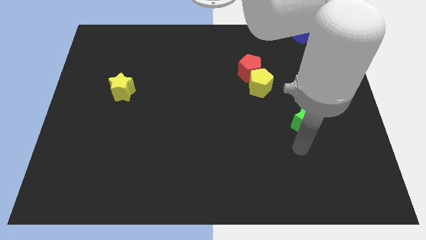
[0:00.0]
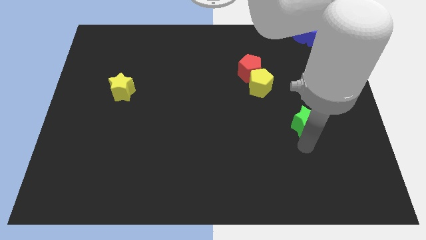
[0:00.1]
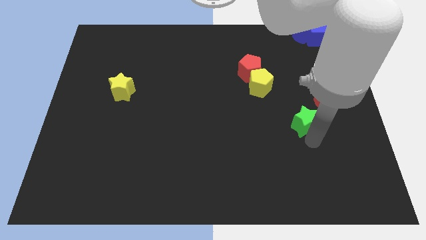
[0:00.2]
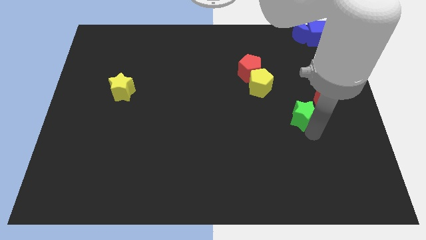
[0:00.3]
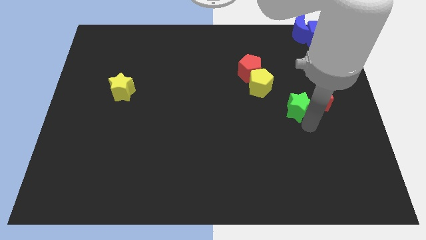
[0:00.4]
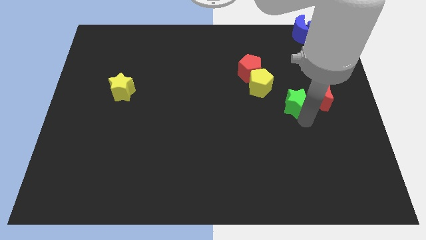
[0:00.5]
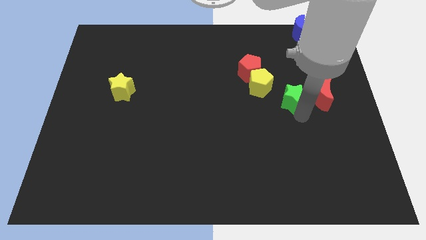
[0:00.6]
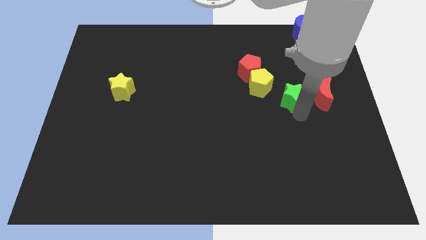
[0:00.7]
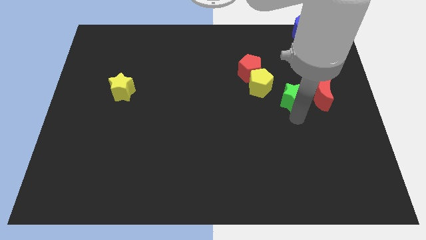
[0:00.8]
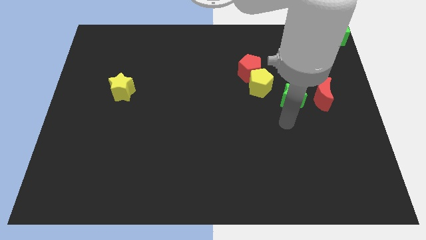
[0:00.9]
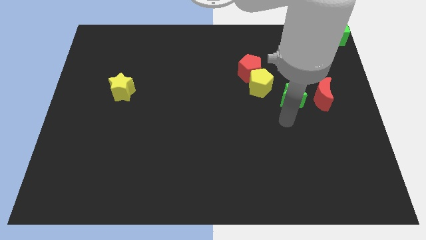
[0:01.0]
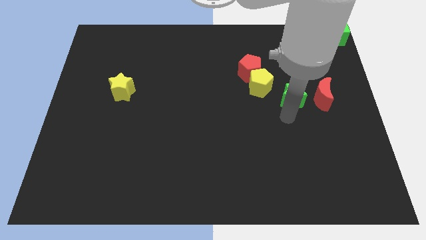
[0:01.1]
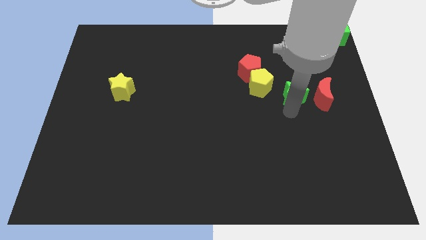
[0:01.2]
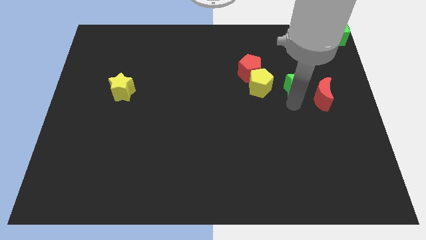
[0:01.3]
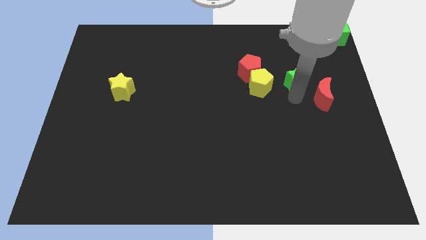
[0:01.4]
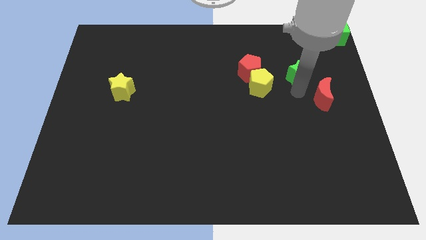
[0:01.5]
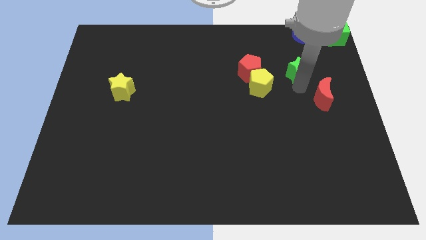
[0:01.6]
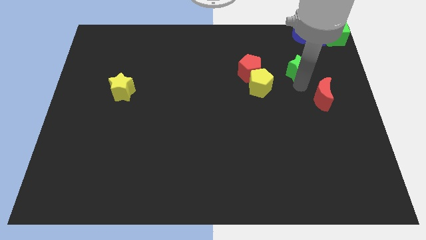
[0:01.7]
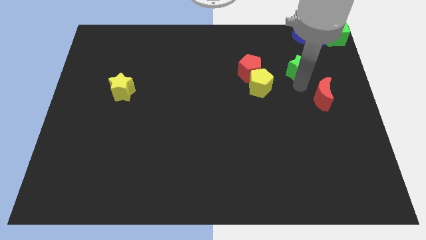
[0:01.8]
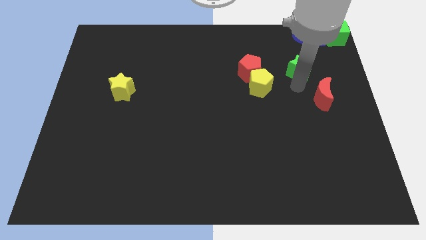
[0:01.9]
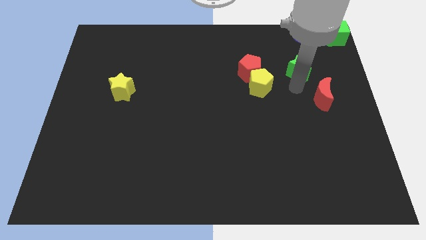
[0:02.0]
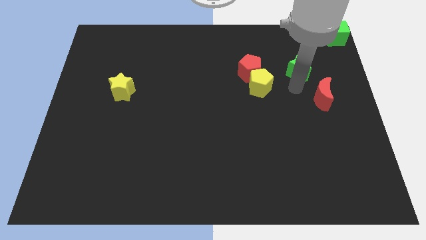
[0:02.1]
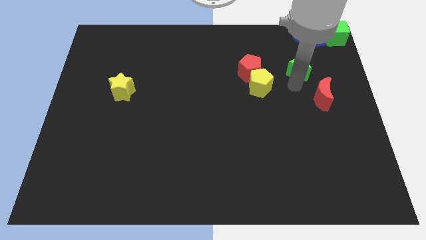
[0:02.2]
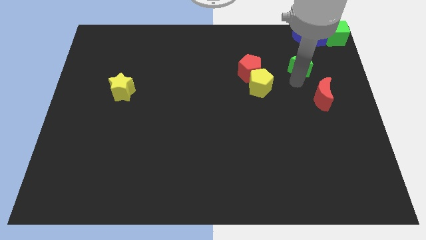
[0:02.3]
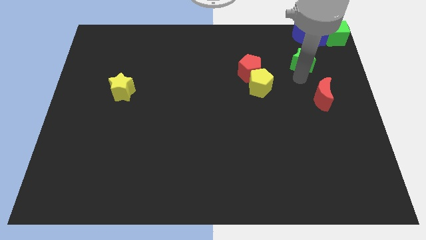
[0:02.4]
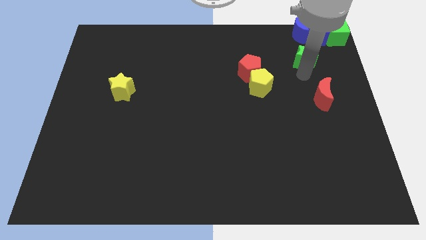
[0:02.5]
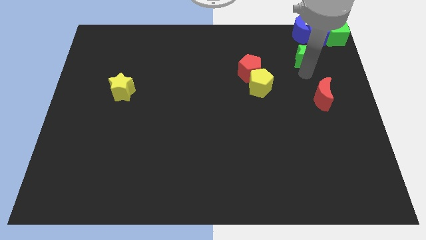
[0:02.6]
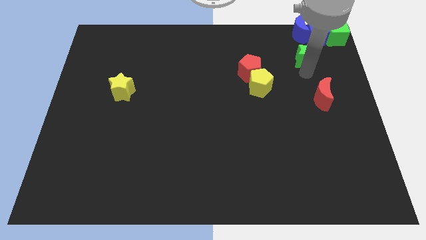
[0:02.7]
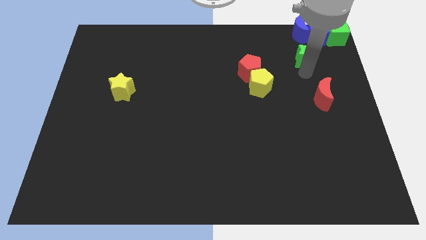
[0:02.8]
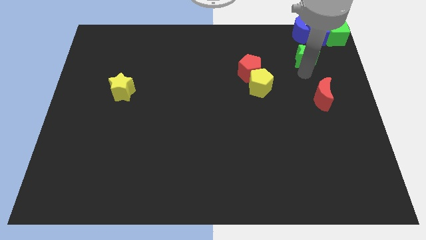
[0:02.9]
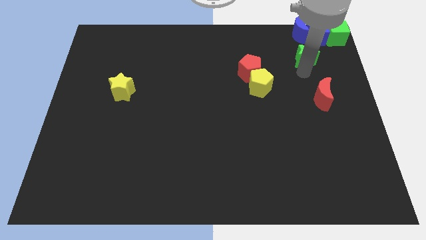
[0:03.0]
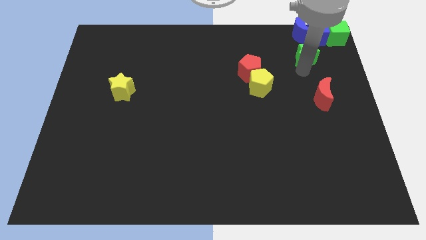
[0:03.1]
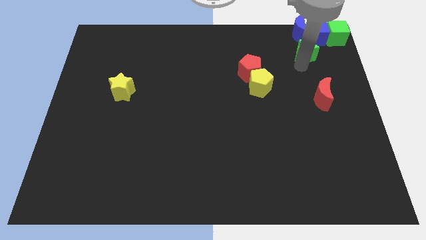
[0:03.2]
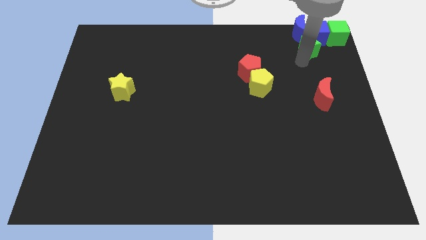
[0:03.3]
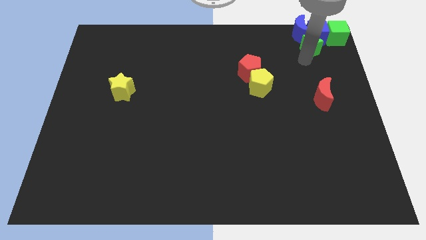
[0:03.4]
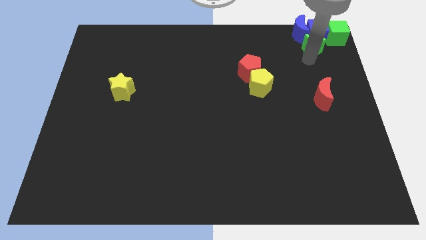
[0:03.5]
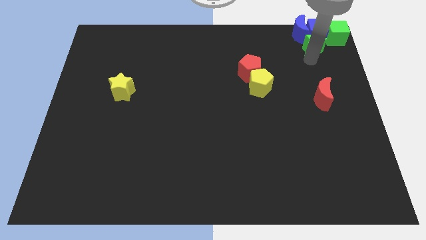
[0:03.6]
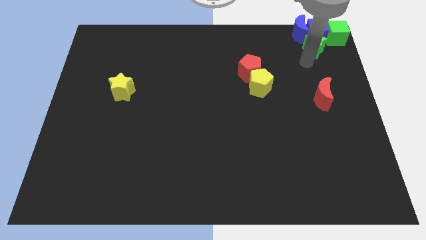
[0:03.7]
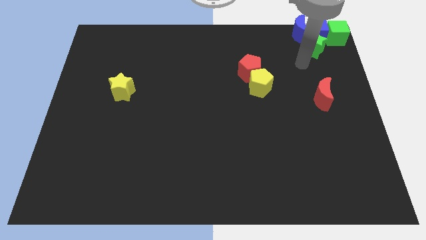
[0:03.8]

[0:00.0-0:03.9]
put the green star vertically above the red moon

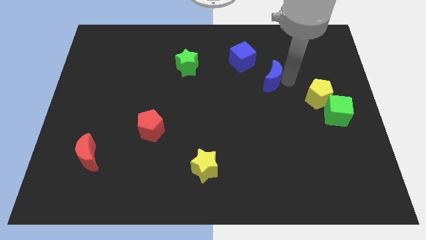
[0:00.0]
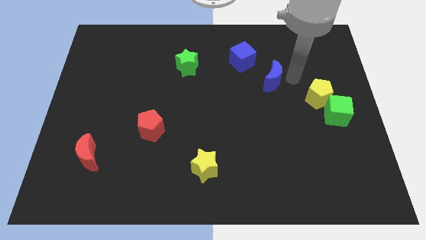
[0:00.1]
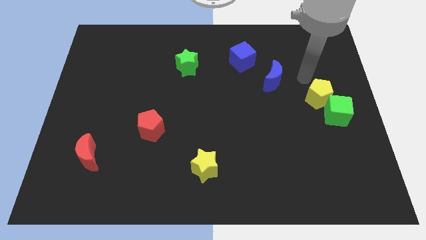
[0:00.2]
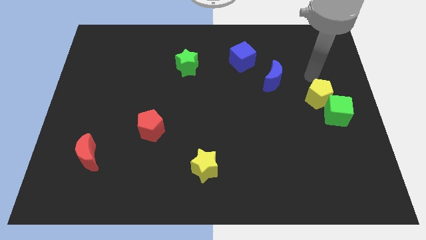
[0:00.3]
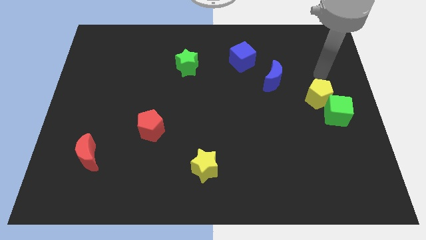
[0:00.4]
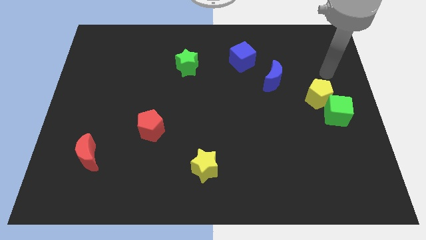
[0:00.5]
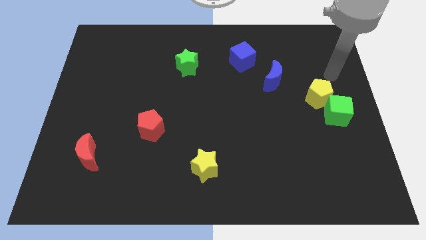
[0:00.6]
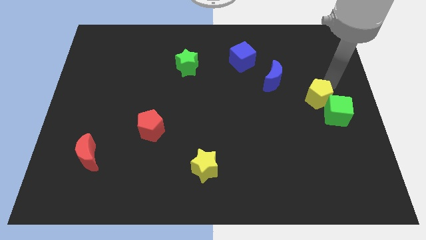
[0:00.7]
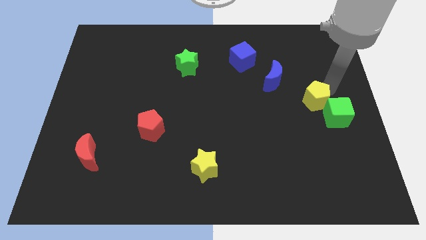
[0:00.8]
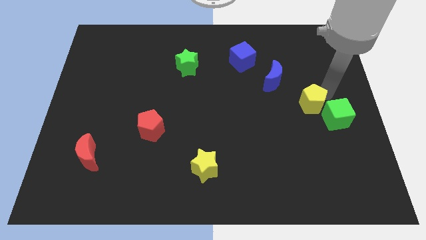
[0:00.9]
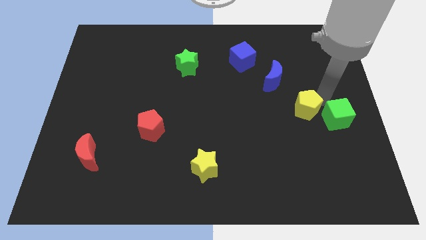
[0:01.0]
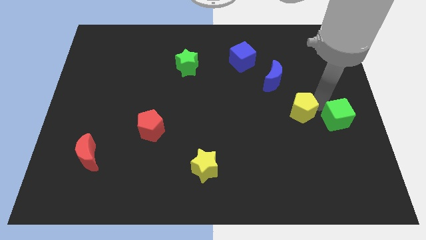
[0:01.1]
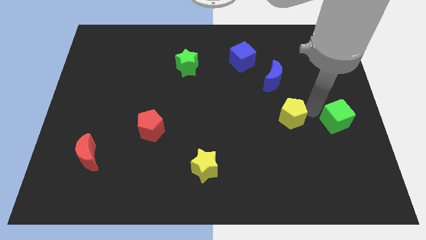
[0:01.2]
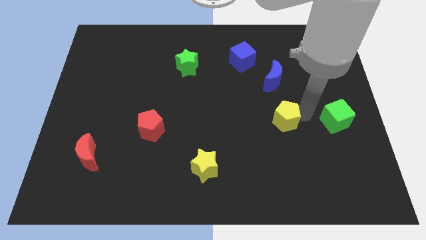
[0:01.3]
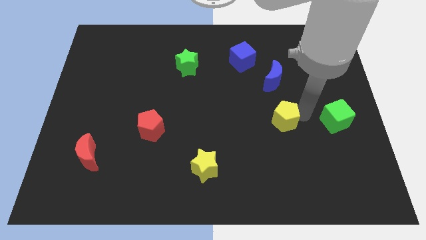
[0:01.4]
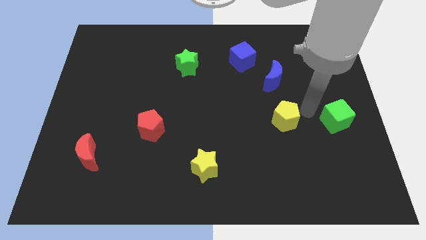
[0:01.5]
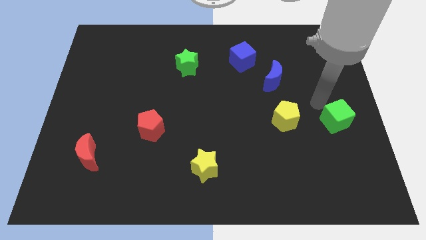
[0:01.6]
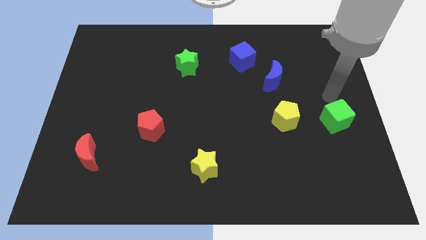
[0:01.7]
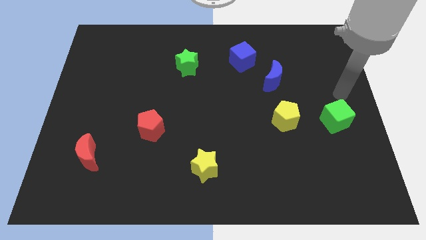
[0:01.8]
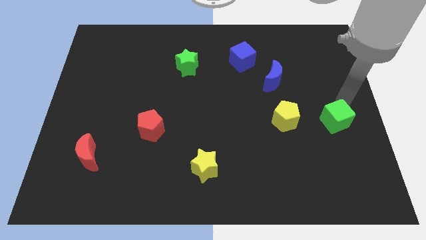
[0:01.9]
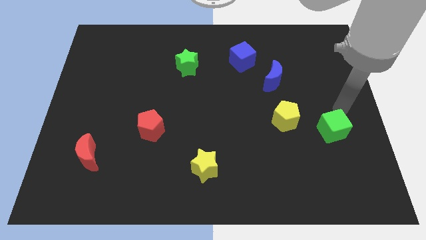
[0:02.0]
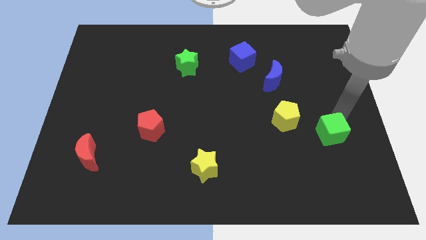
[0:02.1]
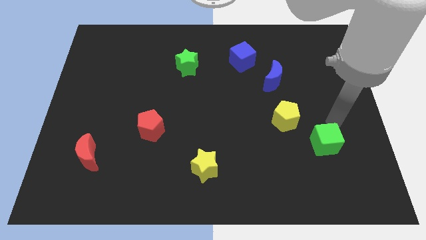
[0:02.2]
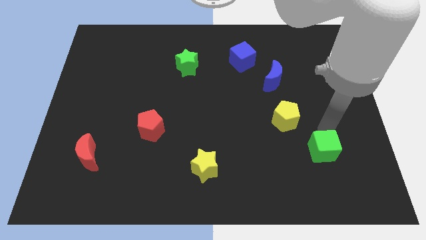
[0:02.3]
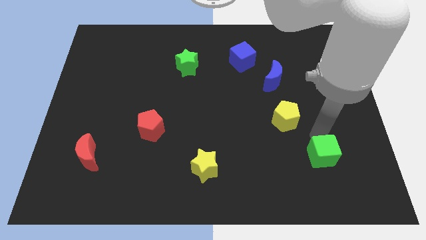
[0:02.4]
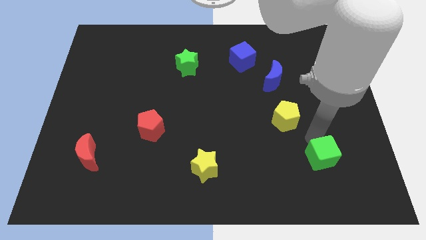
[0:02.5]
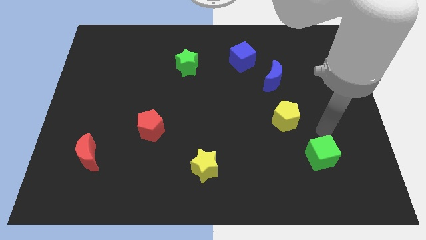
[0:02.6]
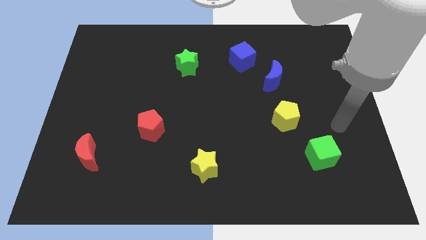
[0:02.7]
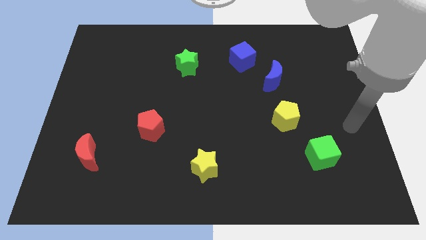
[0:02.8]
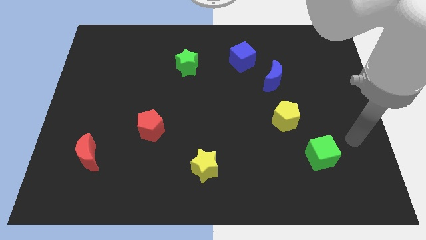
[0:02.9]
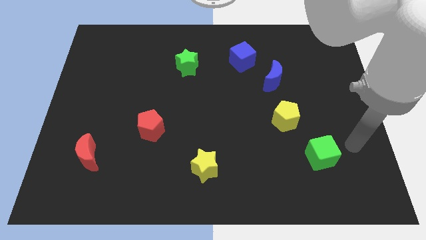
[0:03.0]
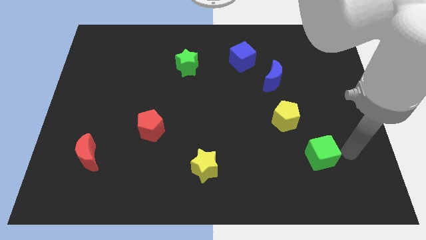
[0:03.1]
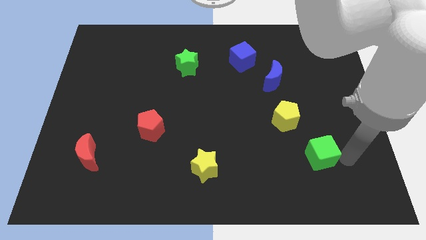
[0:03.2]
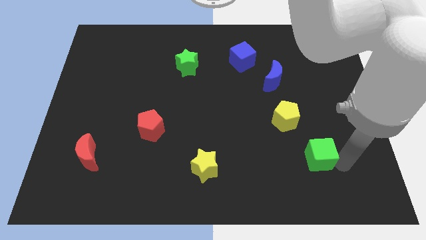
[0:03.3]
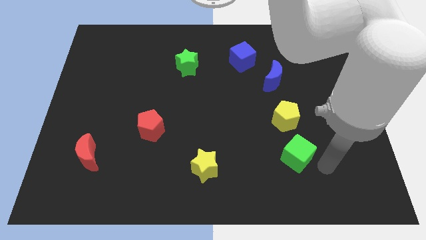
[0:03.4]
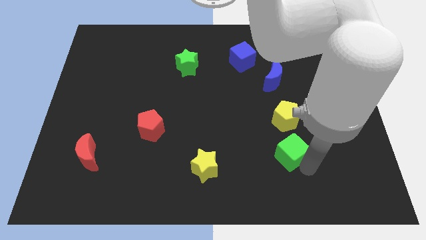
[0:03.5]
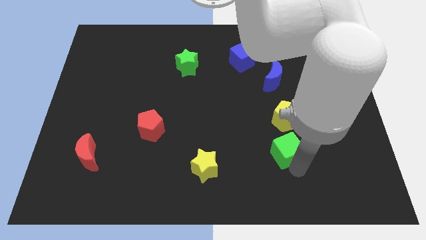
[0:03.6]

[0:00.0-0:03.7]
place the yellow pentagon and the green cube below the blue moon

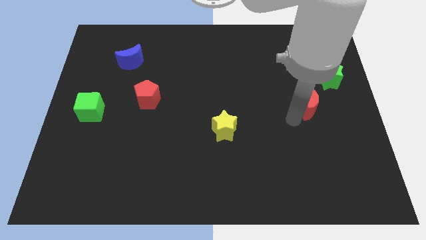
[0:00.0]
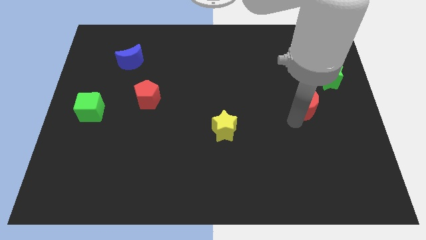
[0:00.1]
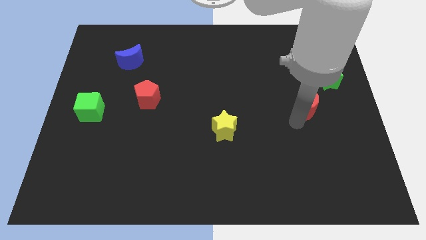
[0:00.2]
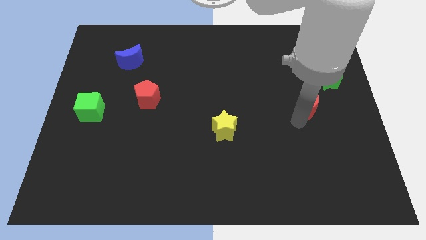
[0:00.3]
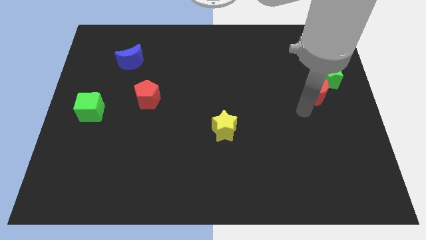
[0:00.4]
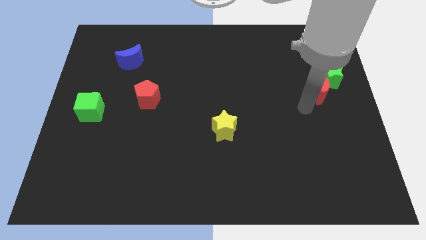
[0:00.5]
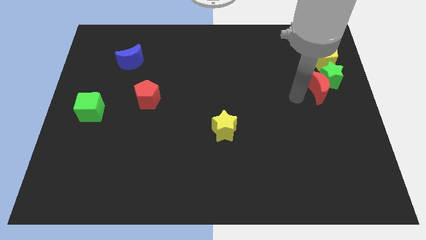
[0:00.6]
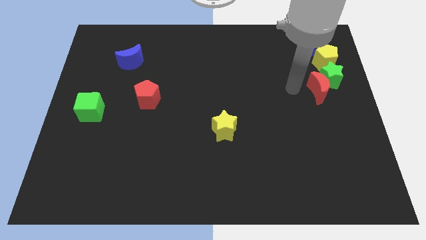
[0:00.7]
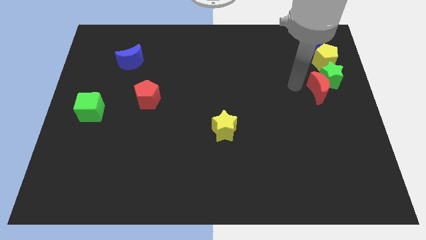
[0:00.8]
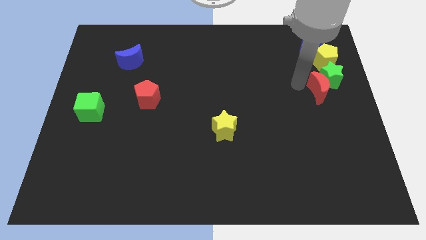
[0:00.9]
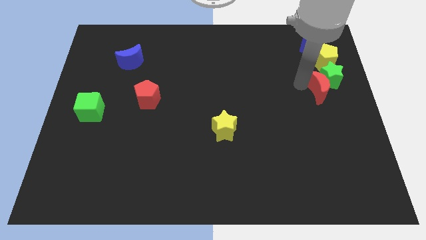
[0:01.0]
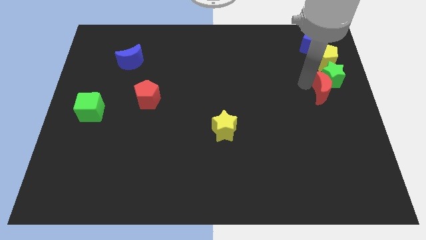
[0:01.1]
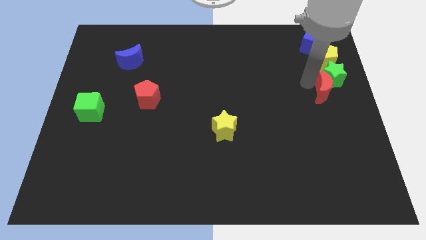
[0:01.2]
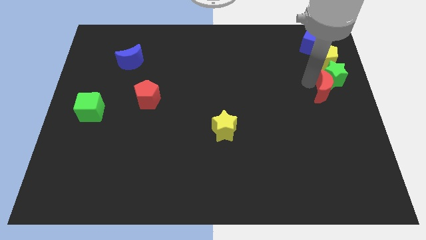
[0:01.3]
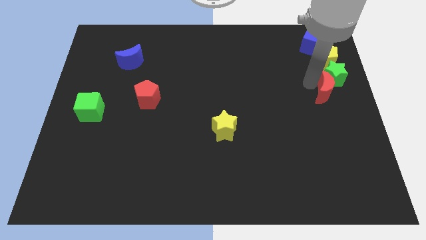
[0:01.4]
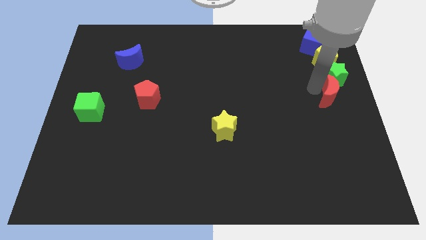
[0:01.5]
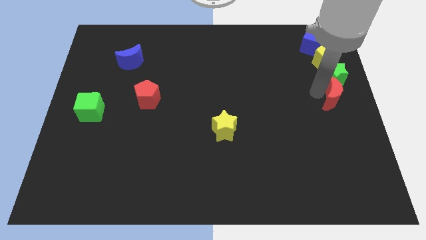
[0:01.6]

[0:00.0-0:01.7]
slide the red crescent into the green star
